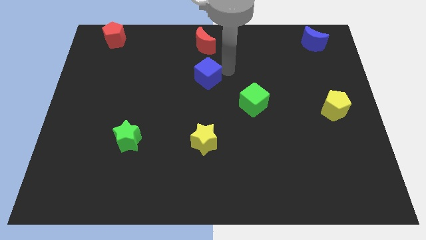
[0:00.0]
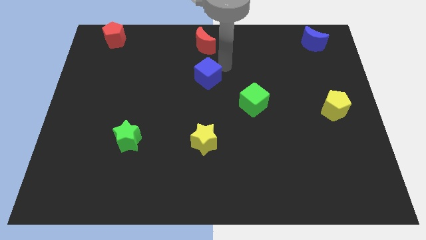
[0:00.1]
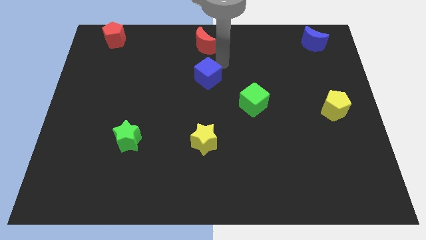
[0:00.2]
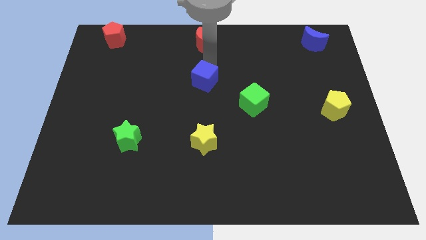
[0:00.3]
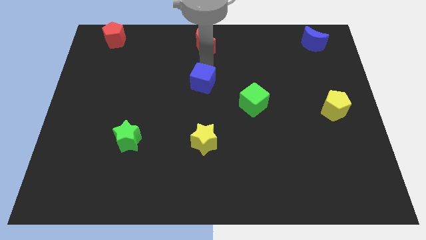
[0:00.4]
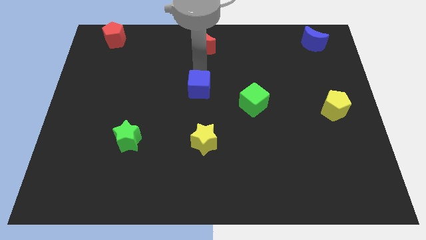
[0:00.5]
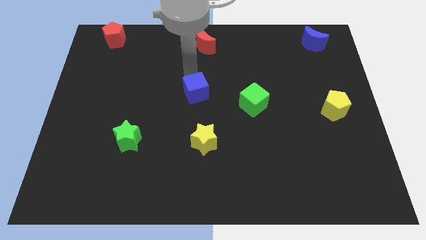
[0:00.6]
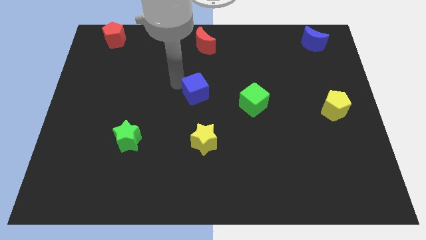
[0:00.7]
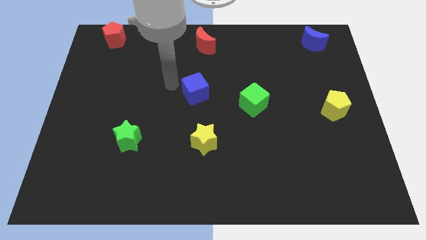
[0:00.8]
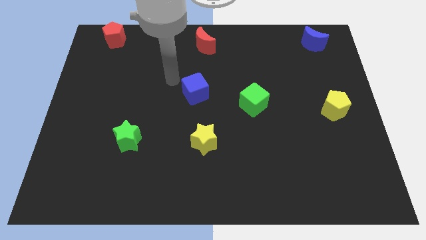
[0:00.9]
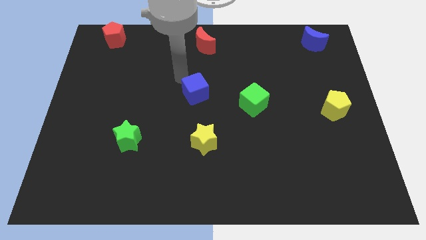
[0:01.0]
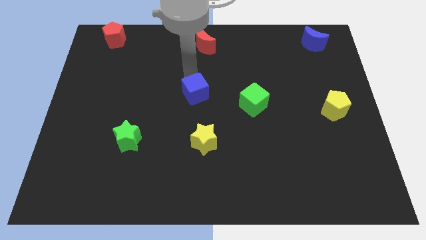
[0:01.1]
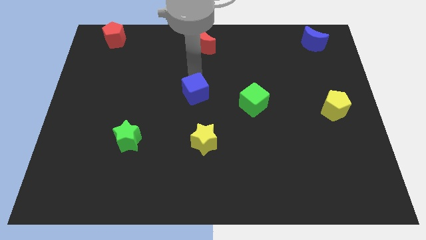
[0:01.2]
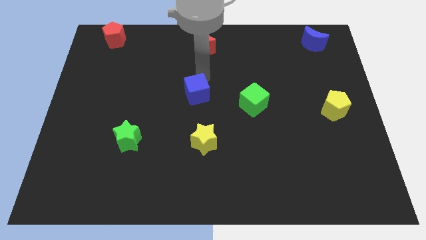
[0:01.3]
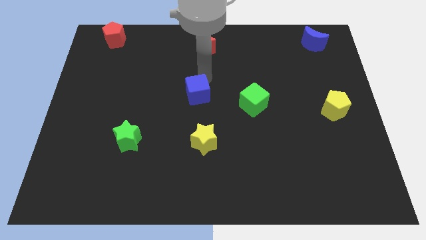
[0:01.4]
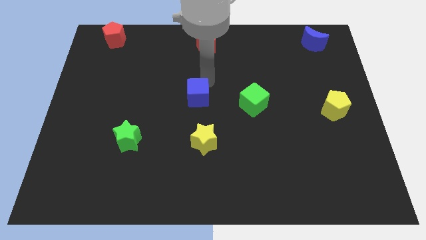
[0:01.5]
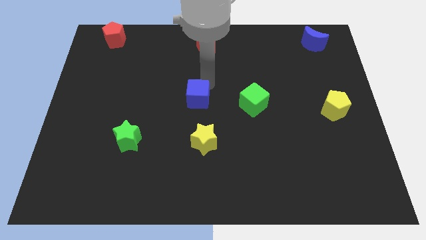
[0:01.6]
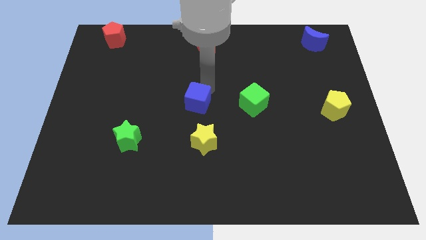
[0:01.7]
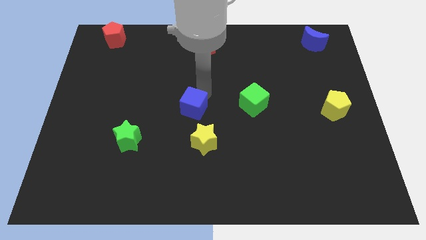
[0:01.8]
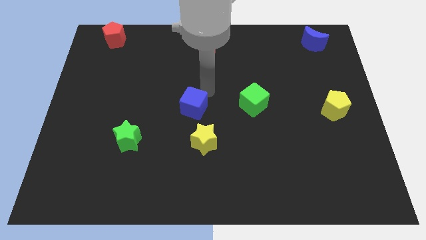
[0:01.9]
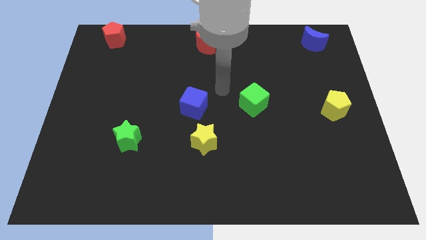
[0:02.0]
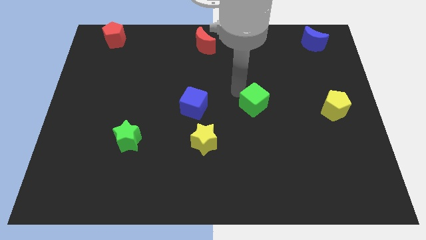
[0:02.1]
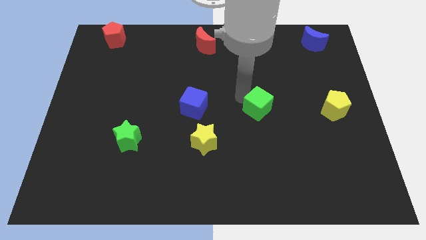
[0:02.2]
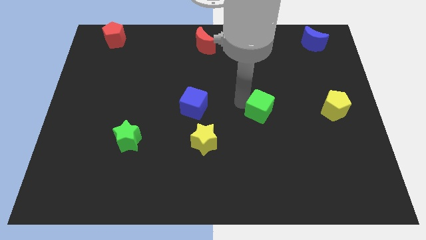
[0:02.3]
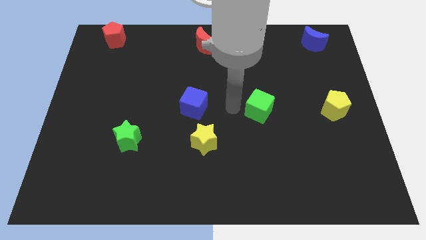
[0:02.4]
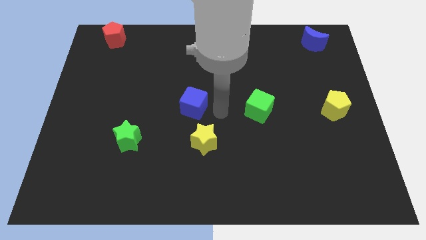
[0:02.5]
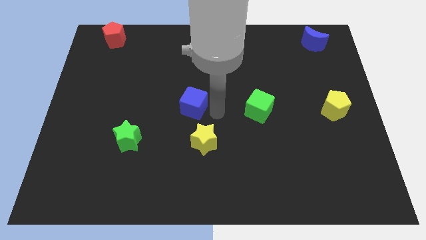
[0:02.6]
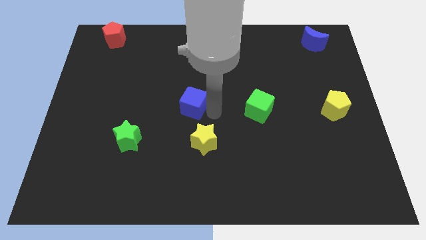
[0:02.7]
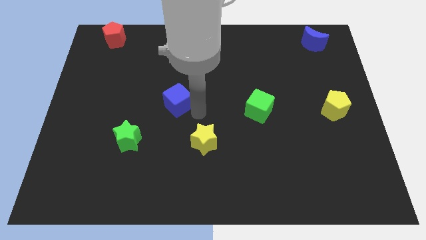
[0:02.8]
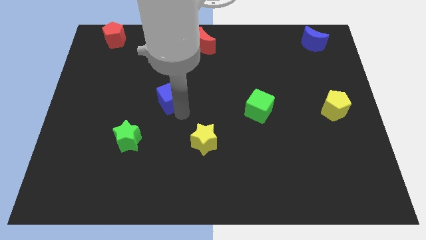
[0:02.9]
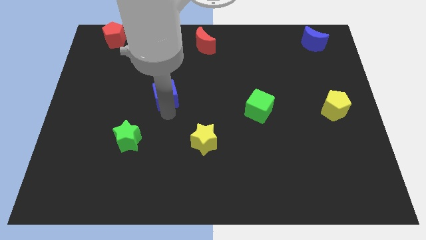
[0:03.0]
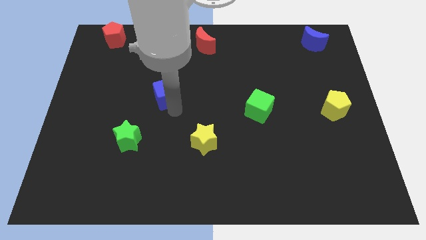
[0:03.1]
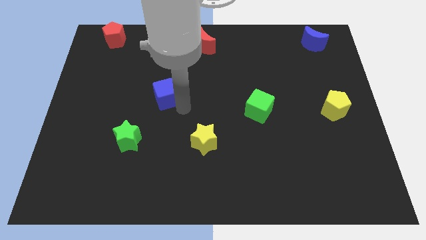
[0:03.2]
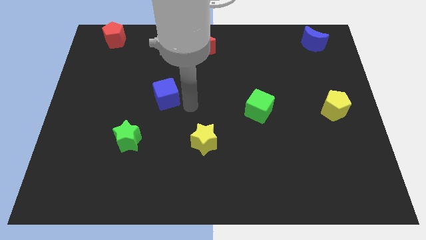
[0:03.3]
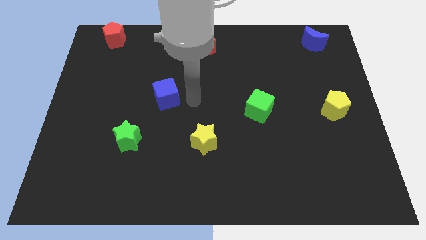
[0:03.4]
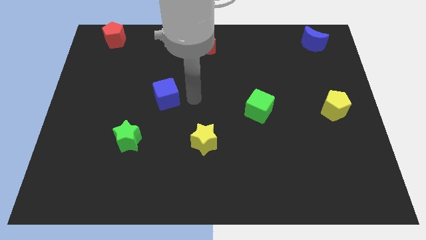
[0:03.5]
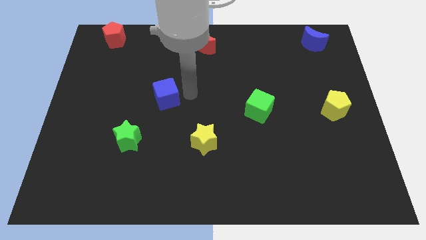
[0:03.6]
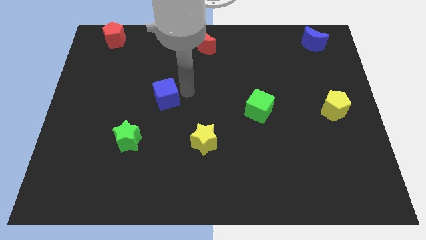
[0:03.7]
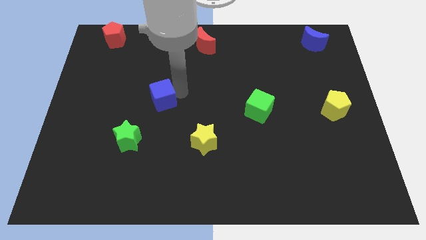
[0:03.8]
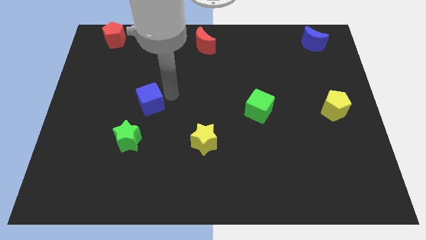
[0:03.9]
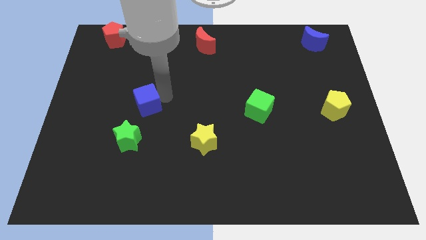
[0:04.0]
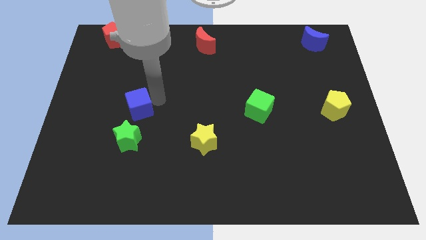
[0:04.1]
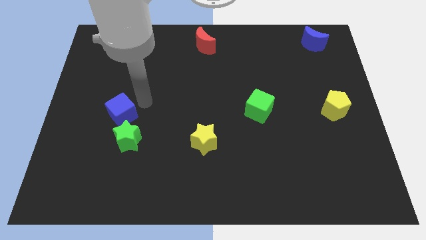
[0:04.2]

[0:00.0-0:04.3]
place blue cube above green star

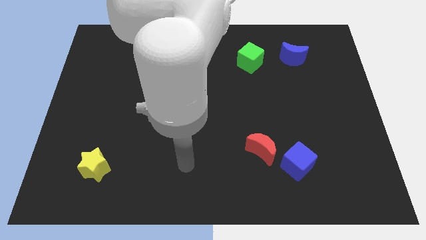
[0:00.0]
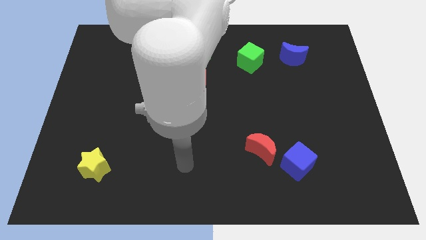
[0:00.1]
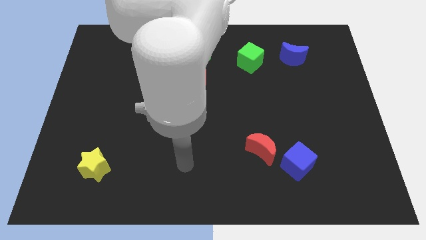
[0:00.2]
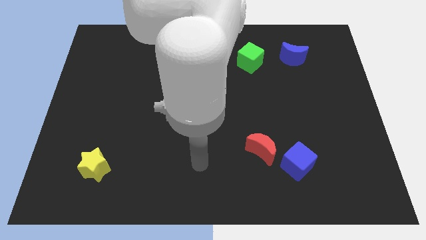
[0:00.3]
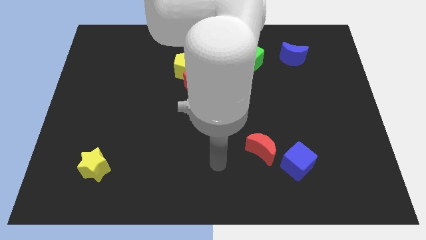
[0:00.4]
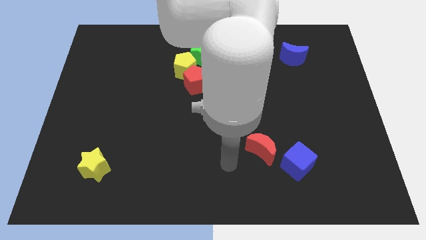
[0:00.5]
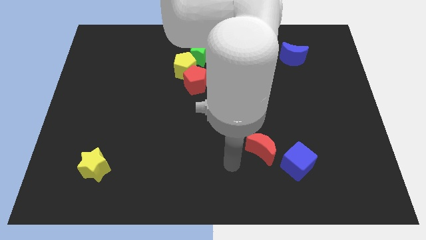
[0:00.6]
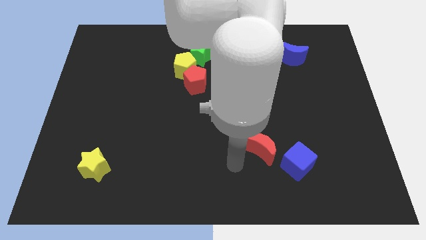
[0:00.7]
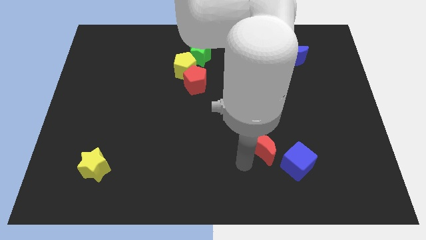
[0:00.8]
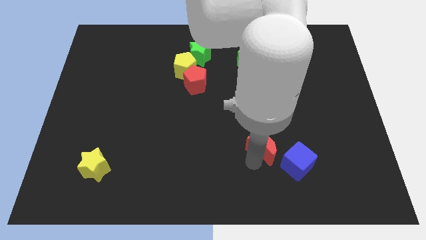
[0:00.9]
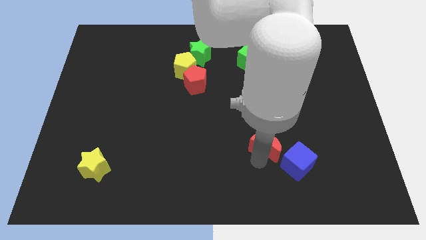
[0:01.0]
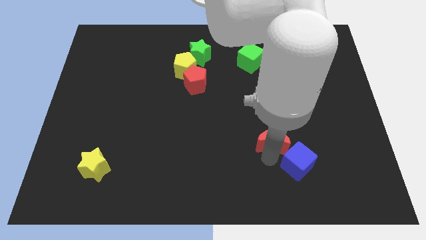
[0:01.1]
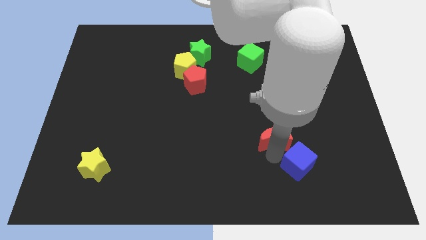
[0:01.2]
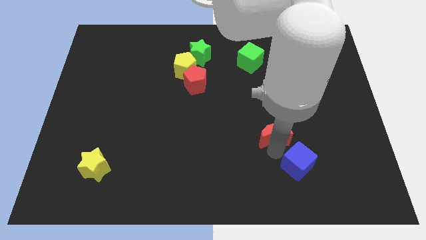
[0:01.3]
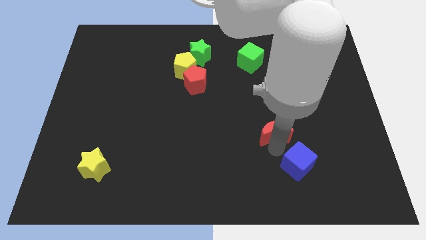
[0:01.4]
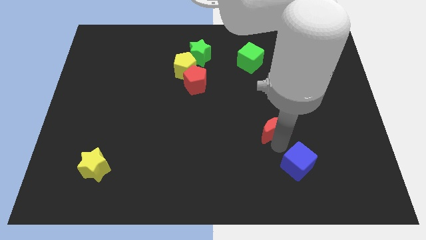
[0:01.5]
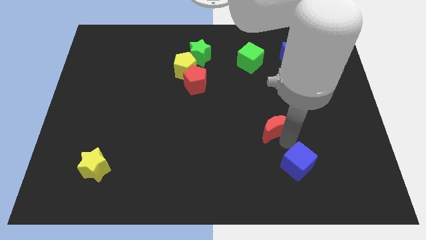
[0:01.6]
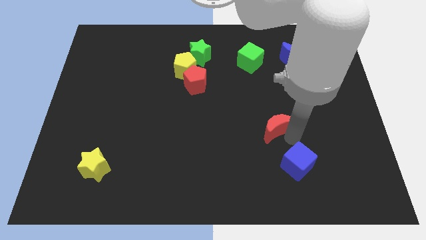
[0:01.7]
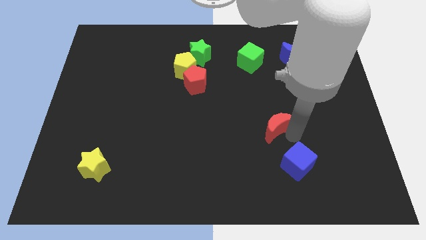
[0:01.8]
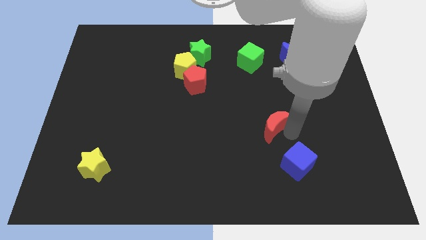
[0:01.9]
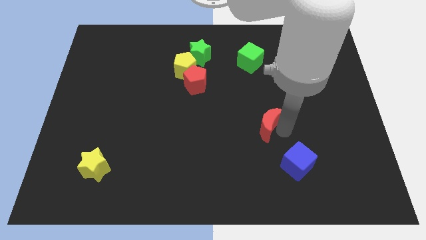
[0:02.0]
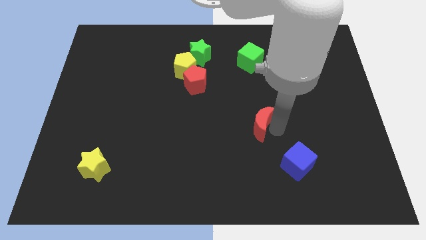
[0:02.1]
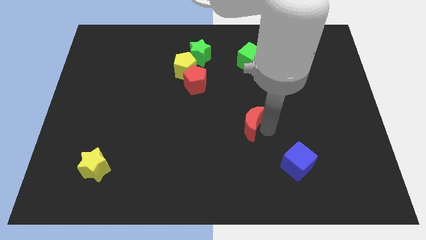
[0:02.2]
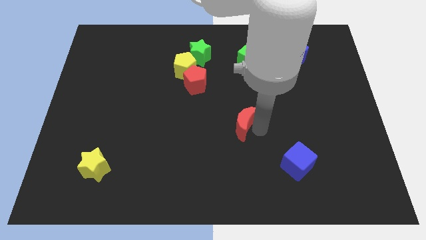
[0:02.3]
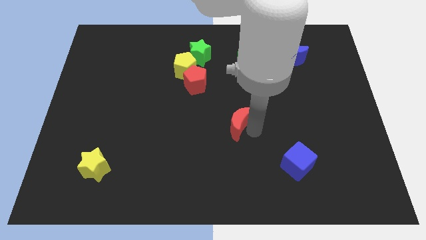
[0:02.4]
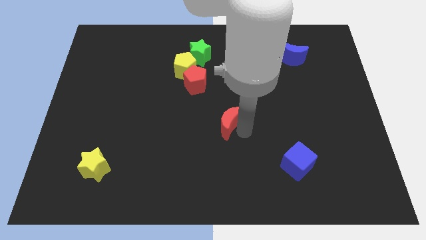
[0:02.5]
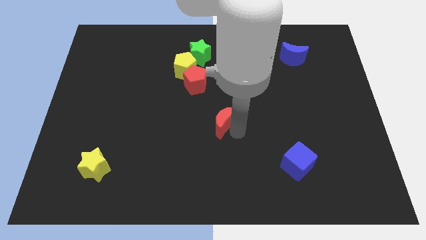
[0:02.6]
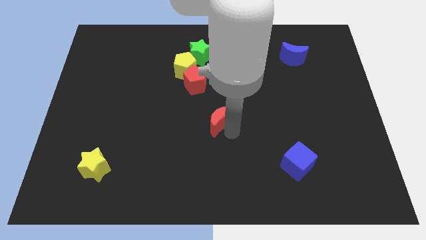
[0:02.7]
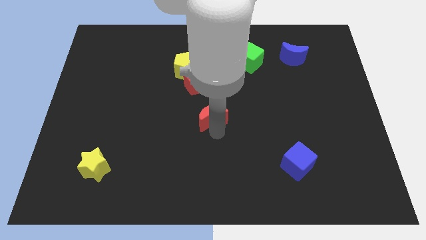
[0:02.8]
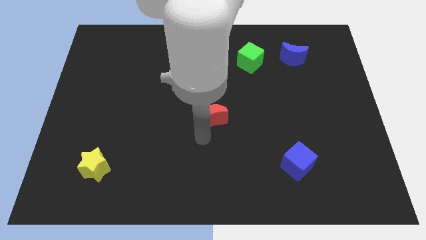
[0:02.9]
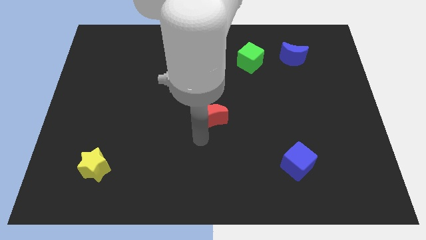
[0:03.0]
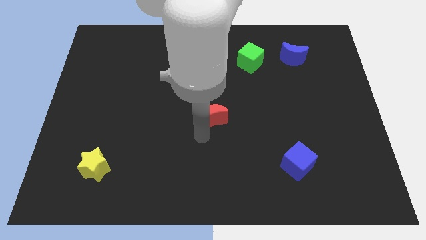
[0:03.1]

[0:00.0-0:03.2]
move the red crescent to the center of the board

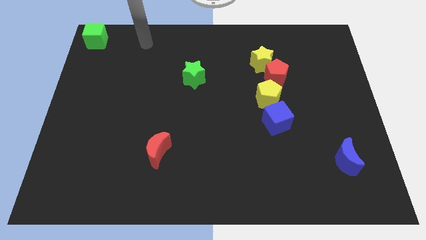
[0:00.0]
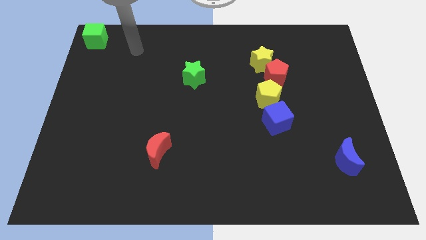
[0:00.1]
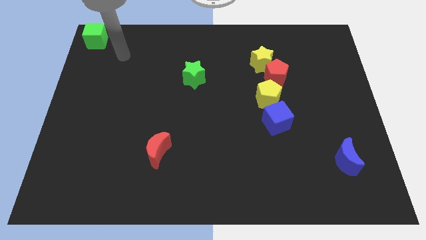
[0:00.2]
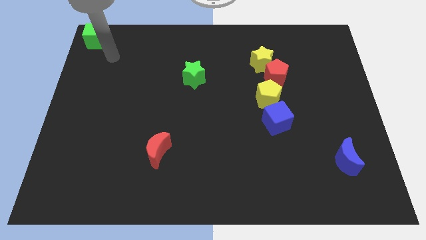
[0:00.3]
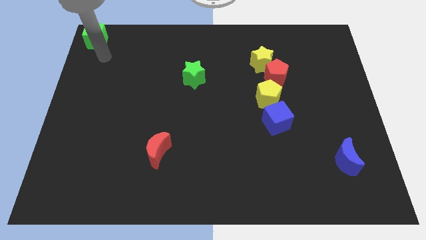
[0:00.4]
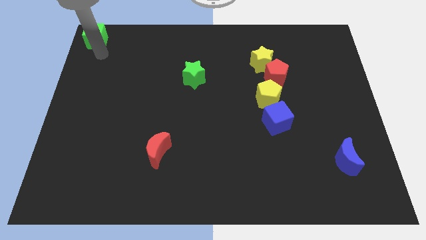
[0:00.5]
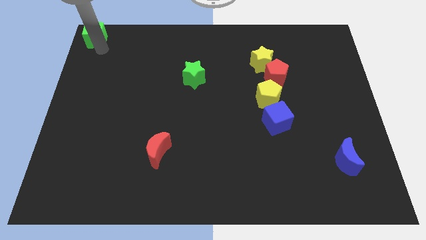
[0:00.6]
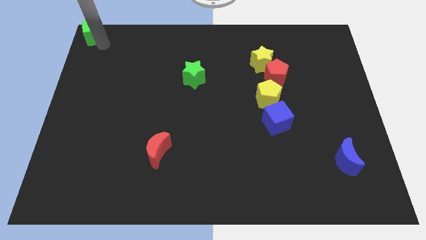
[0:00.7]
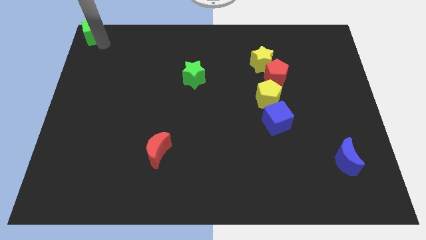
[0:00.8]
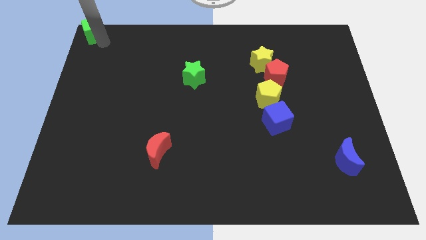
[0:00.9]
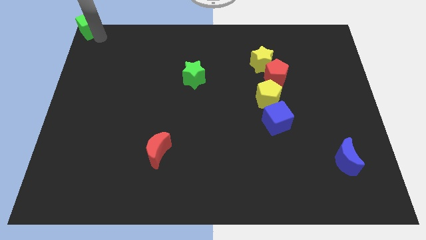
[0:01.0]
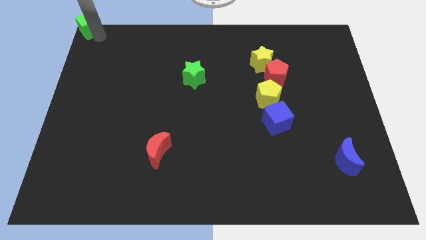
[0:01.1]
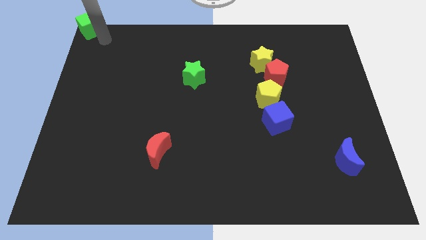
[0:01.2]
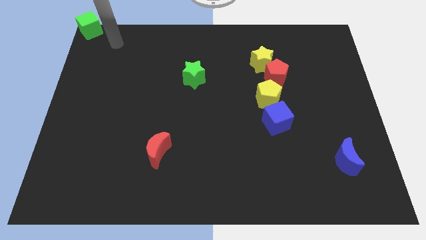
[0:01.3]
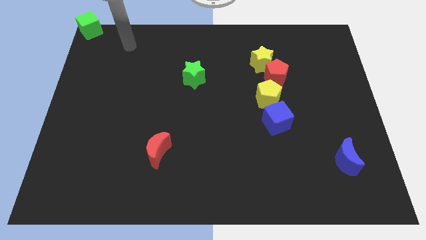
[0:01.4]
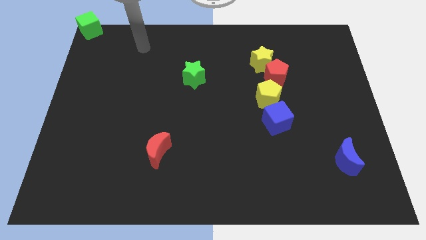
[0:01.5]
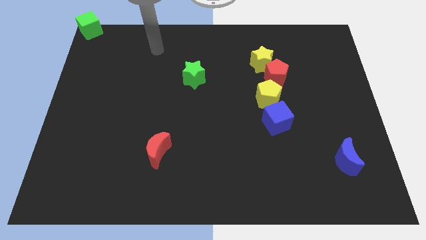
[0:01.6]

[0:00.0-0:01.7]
slightly push the green cube to the top left corner of the board
